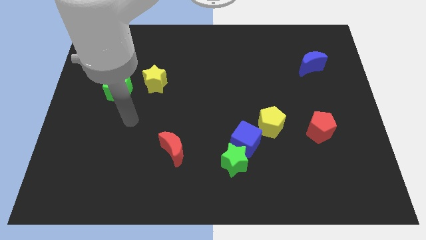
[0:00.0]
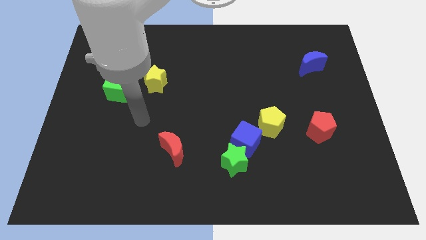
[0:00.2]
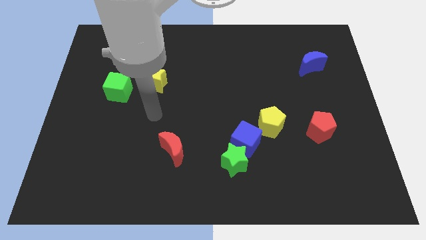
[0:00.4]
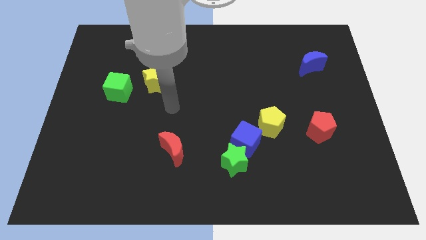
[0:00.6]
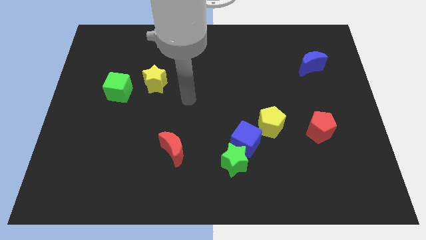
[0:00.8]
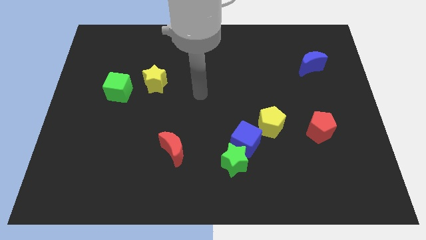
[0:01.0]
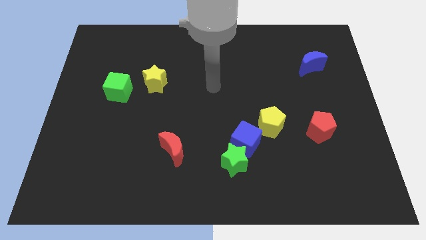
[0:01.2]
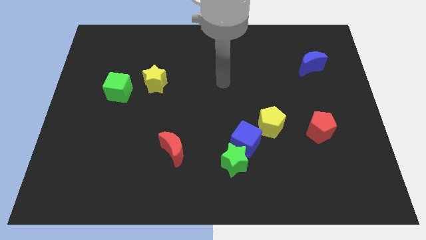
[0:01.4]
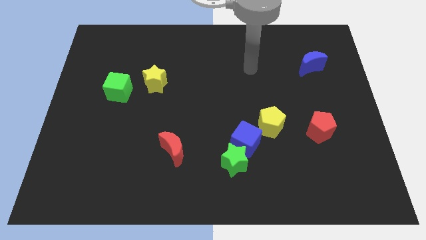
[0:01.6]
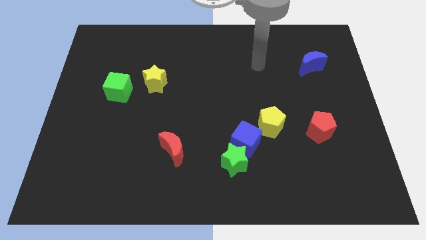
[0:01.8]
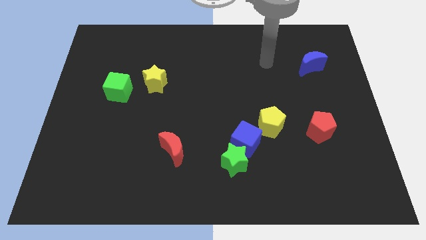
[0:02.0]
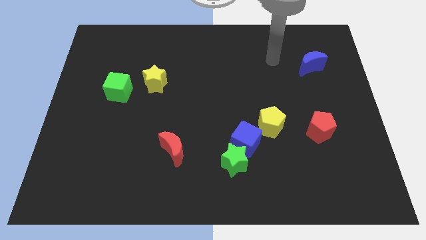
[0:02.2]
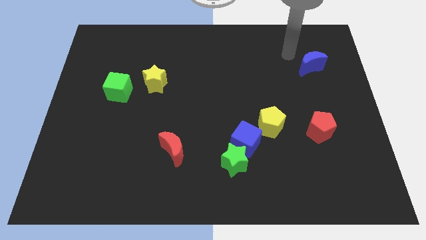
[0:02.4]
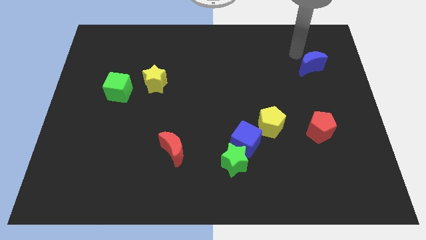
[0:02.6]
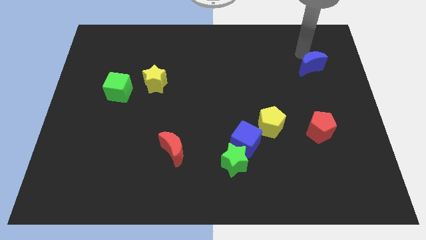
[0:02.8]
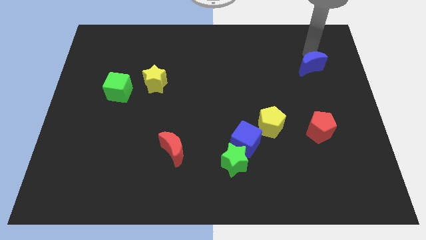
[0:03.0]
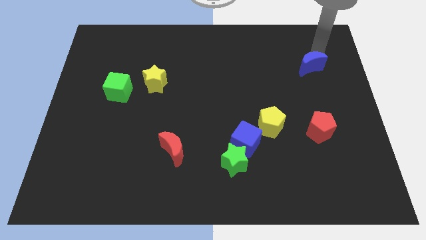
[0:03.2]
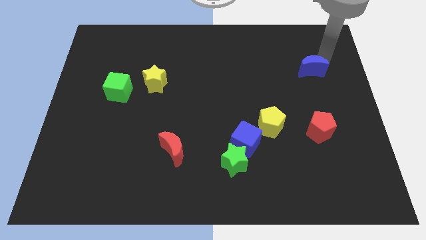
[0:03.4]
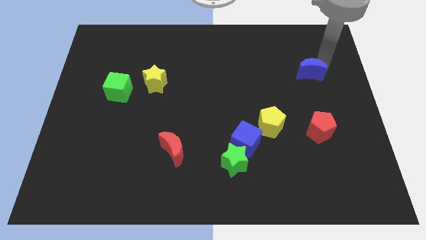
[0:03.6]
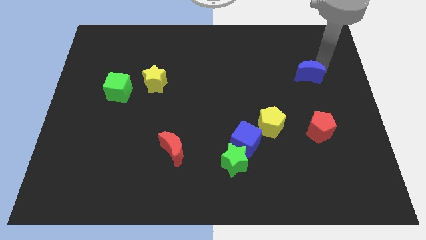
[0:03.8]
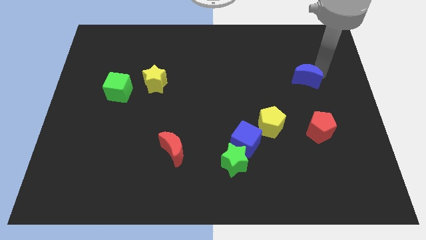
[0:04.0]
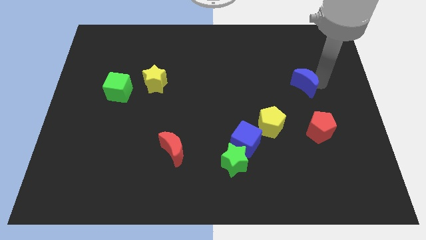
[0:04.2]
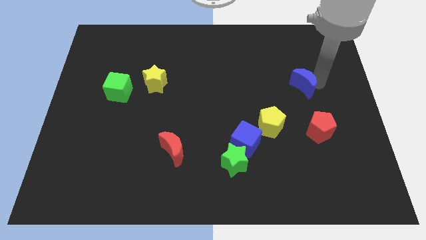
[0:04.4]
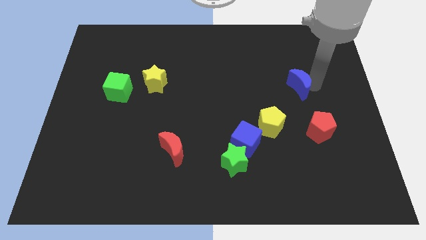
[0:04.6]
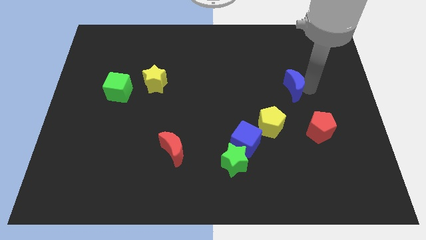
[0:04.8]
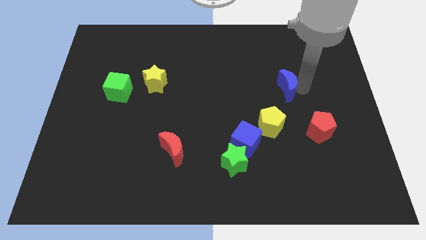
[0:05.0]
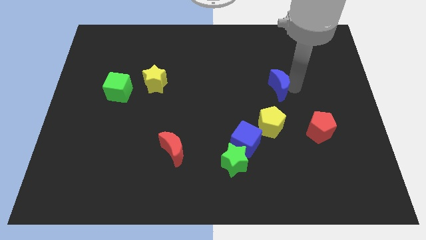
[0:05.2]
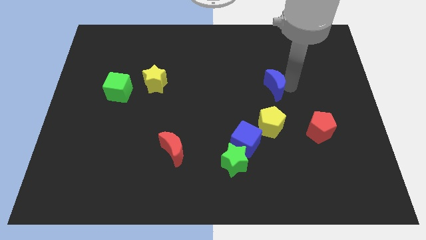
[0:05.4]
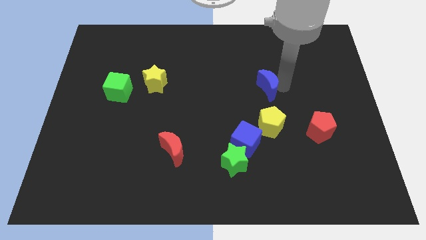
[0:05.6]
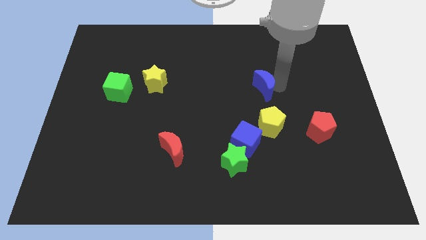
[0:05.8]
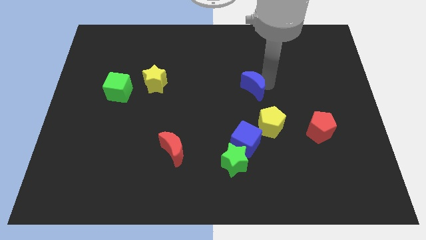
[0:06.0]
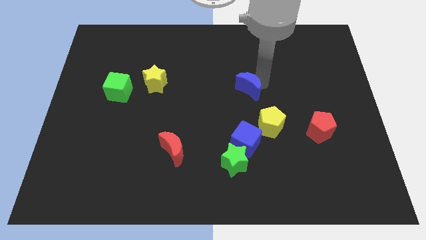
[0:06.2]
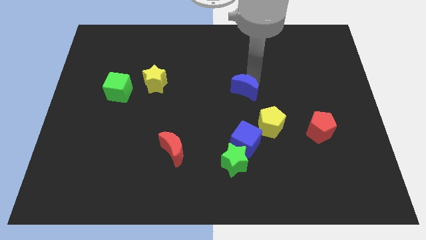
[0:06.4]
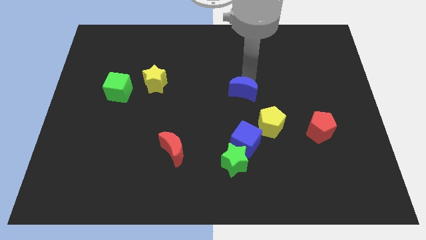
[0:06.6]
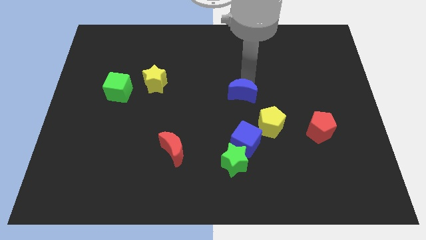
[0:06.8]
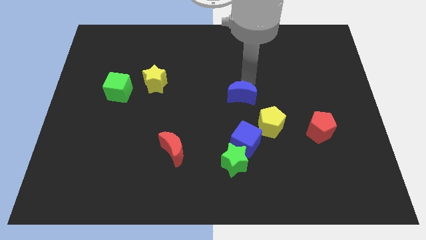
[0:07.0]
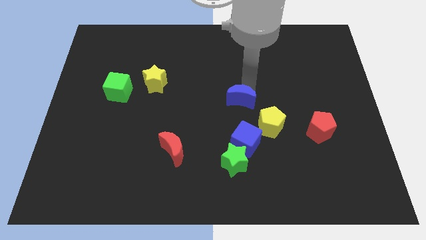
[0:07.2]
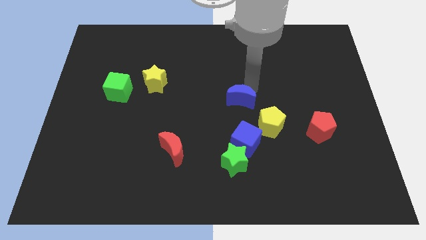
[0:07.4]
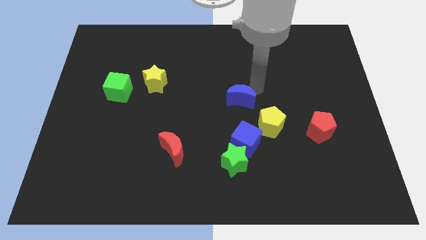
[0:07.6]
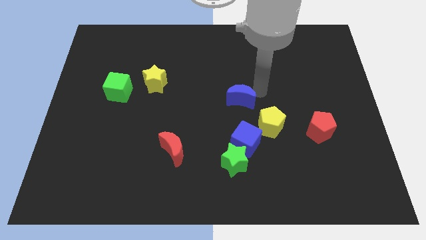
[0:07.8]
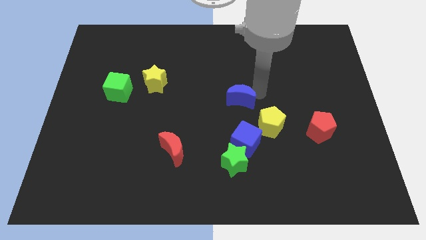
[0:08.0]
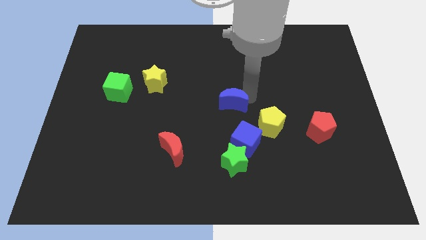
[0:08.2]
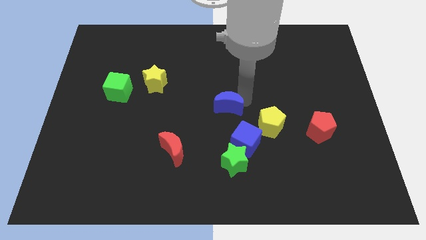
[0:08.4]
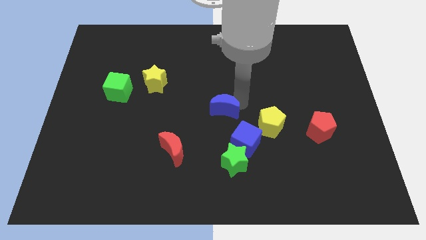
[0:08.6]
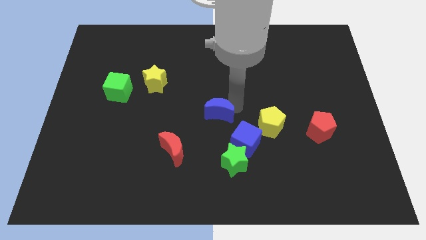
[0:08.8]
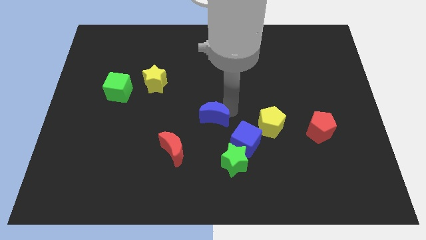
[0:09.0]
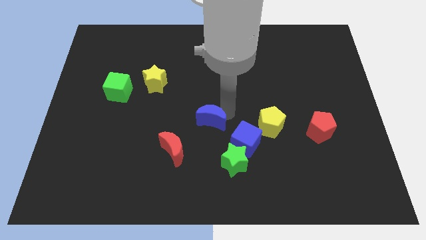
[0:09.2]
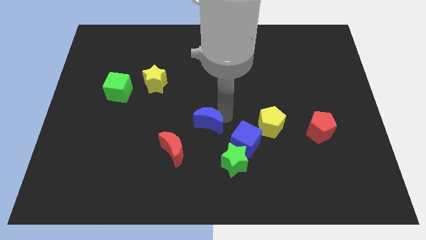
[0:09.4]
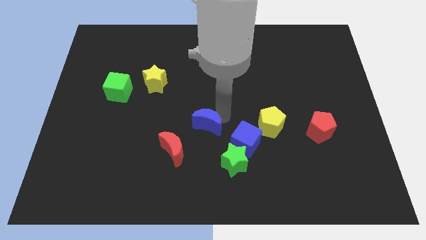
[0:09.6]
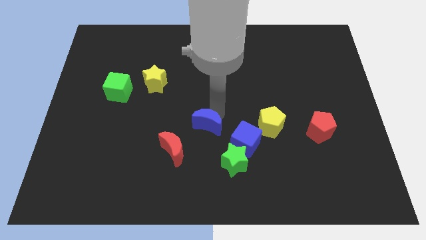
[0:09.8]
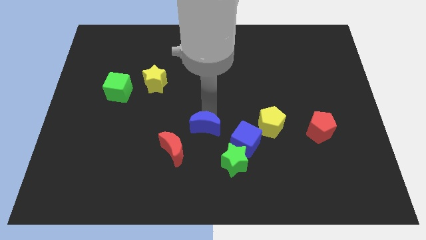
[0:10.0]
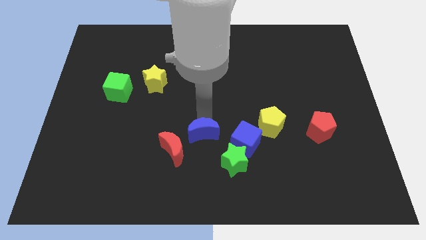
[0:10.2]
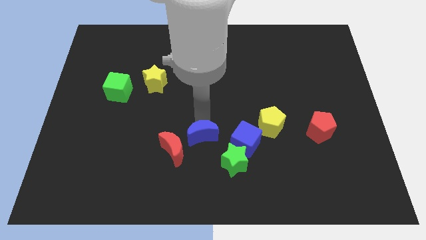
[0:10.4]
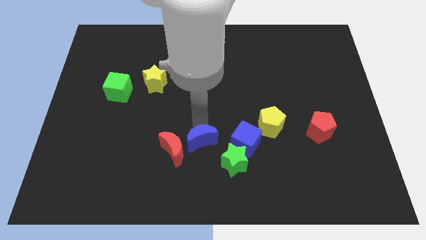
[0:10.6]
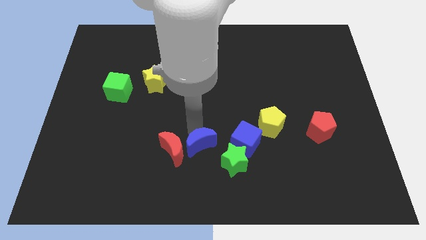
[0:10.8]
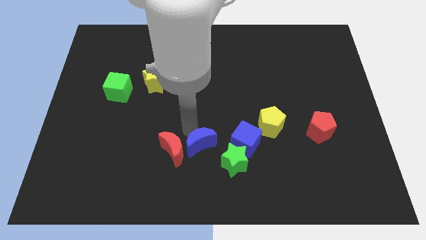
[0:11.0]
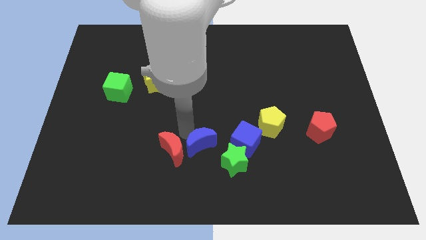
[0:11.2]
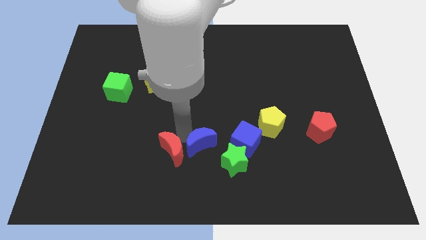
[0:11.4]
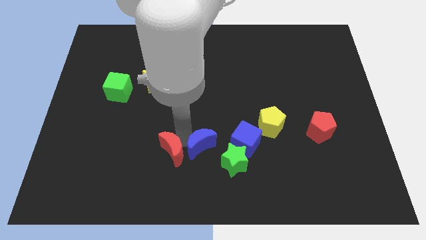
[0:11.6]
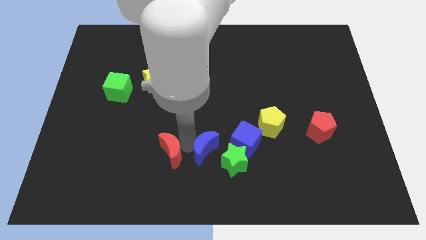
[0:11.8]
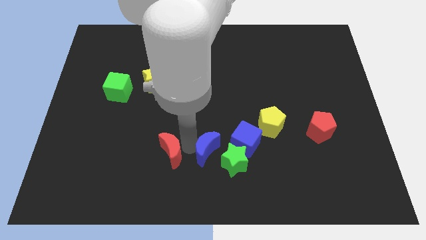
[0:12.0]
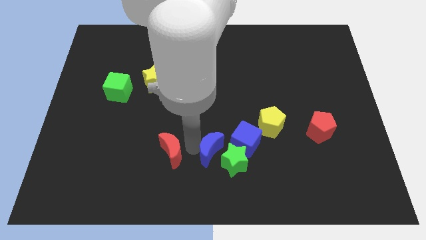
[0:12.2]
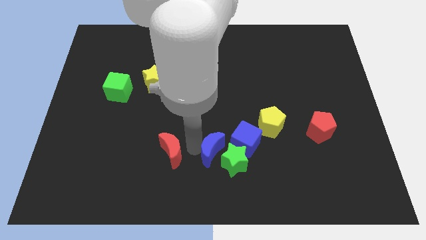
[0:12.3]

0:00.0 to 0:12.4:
slide the blue moon next to the green star

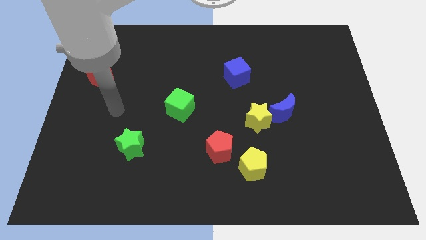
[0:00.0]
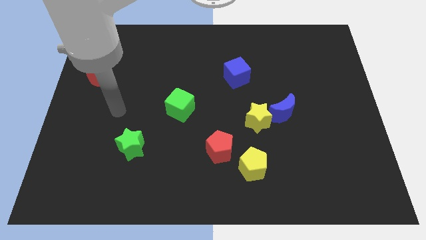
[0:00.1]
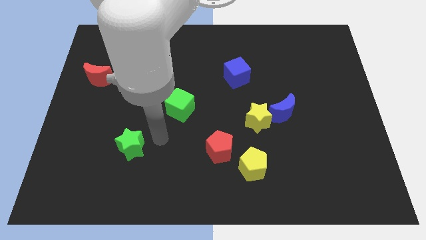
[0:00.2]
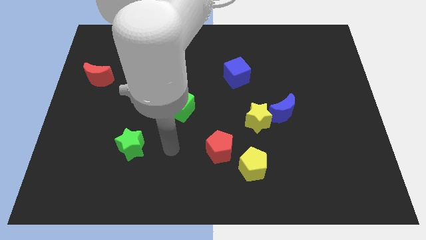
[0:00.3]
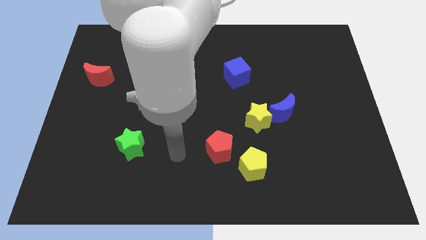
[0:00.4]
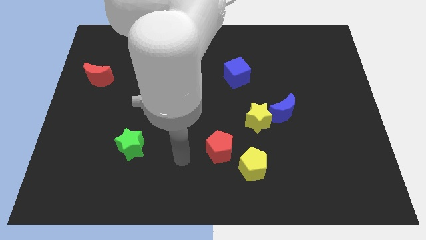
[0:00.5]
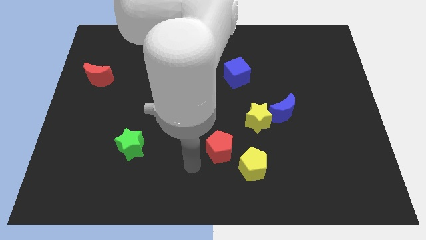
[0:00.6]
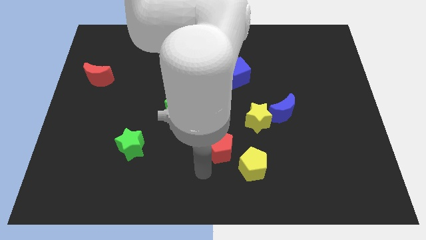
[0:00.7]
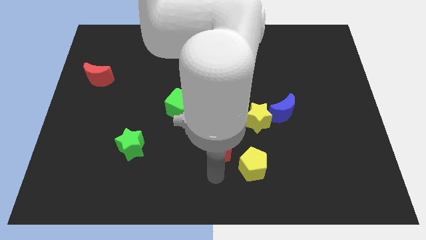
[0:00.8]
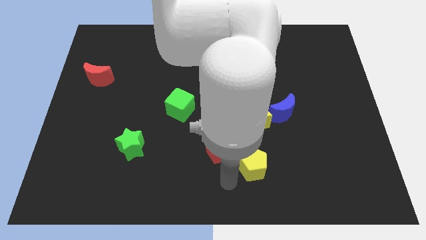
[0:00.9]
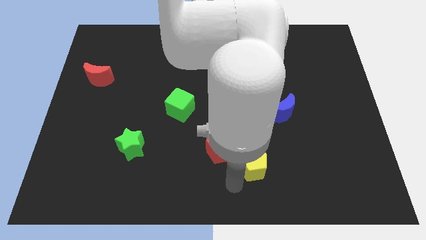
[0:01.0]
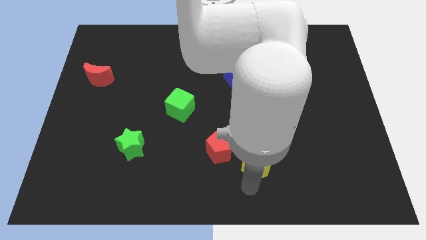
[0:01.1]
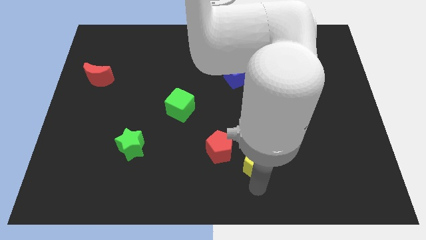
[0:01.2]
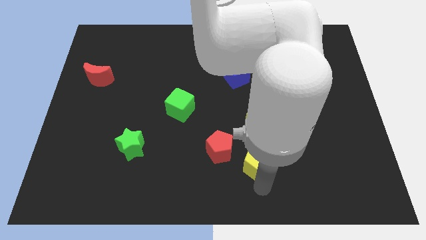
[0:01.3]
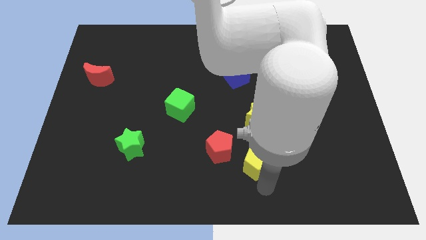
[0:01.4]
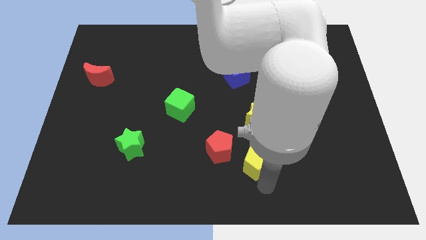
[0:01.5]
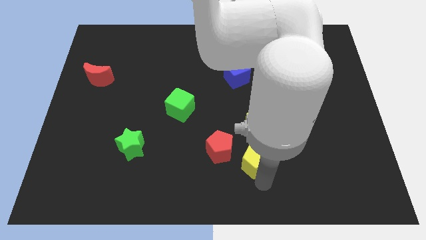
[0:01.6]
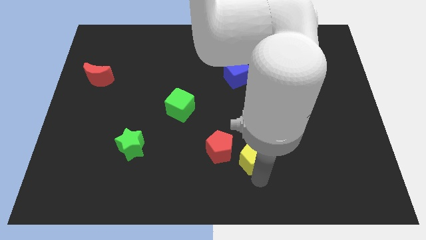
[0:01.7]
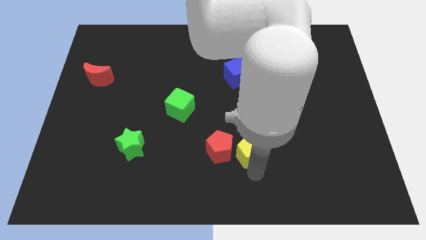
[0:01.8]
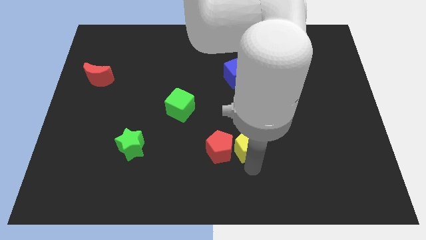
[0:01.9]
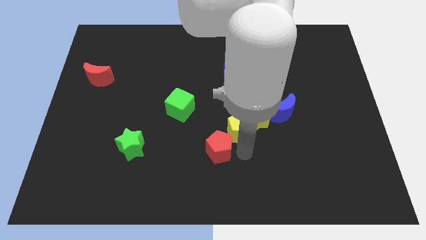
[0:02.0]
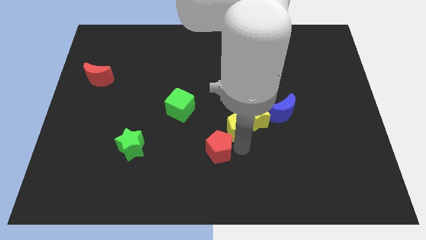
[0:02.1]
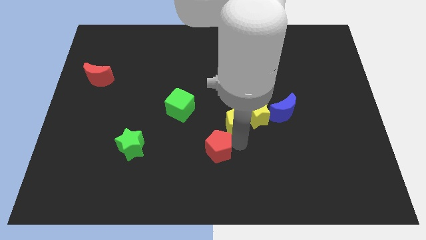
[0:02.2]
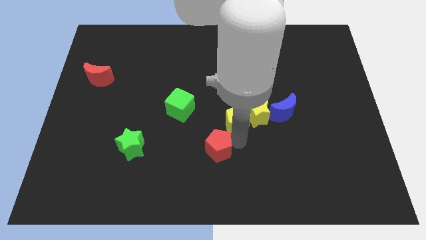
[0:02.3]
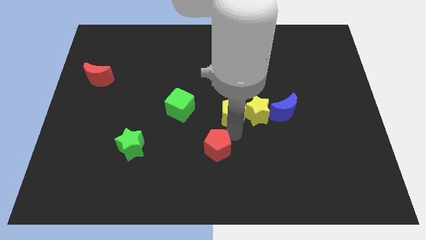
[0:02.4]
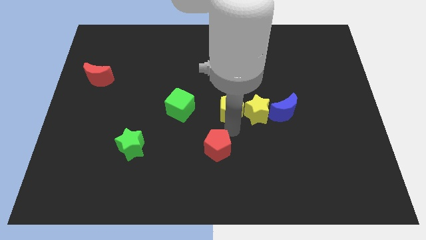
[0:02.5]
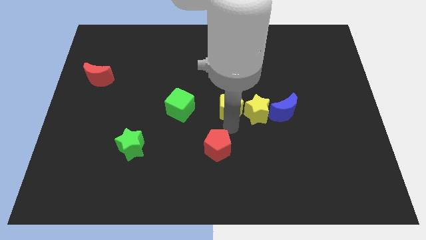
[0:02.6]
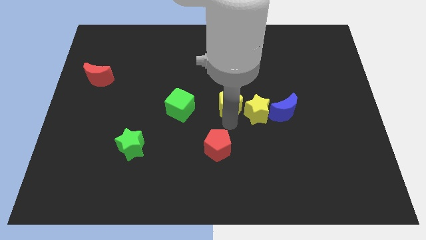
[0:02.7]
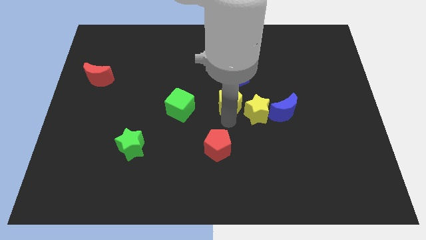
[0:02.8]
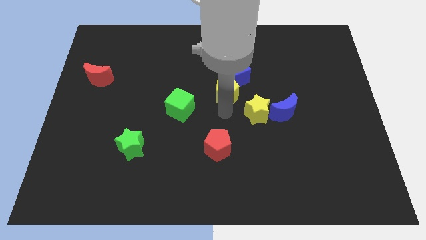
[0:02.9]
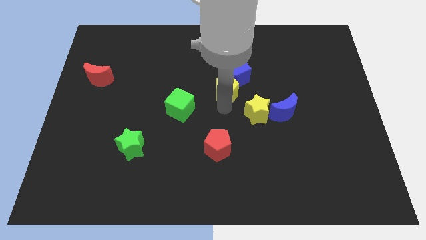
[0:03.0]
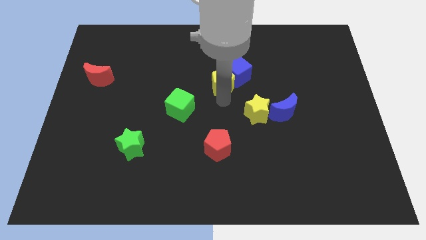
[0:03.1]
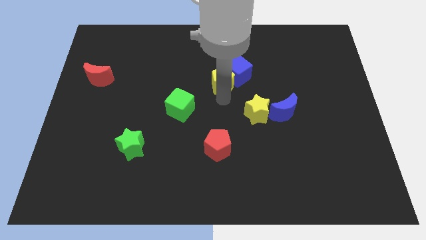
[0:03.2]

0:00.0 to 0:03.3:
move the yellow pentagon to the blue cube
